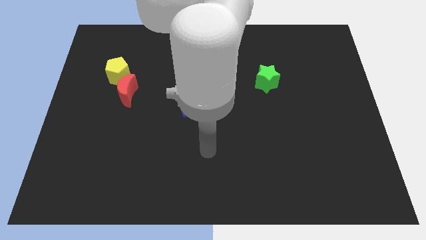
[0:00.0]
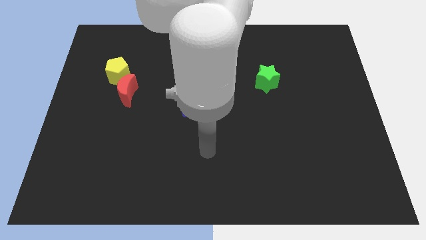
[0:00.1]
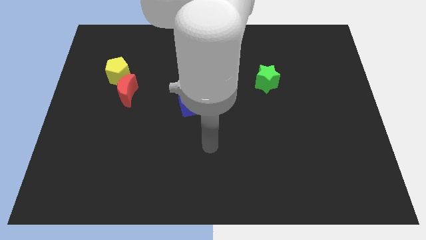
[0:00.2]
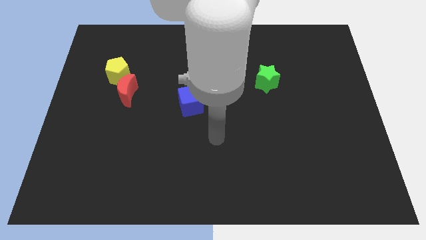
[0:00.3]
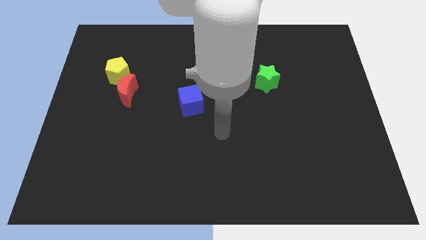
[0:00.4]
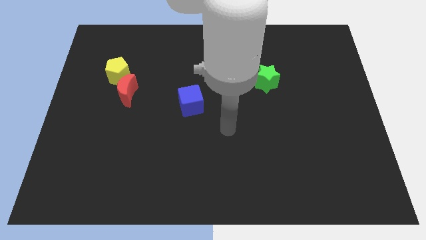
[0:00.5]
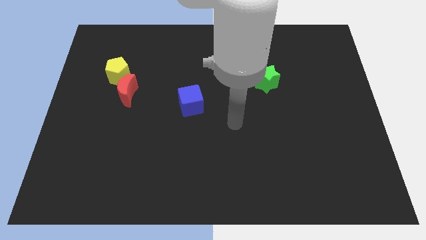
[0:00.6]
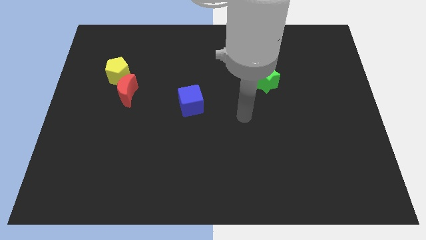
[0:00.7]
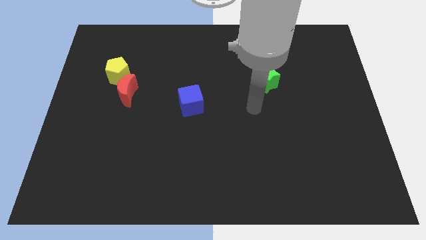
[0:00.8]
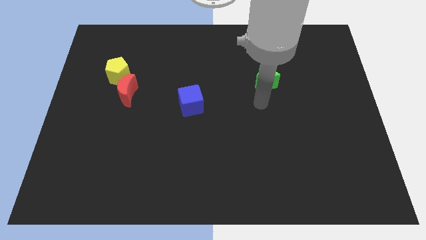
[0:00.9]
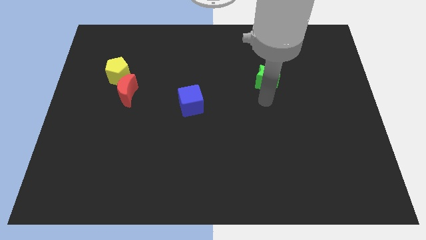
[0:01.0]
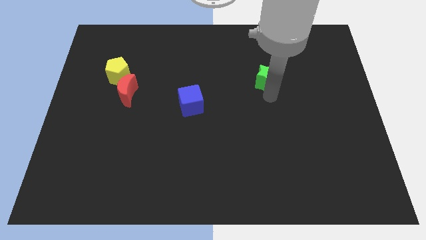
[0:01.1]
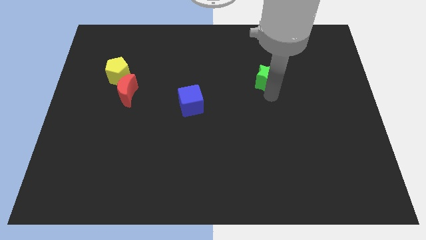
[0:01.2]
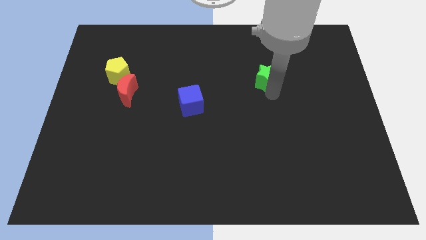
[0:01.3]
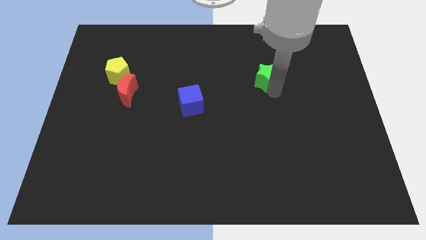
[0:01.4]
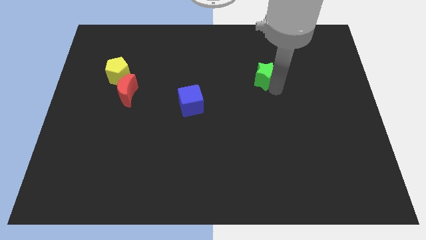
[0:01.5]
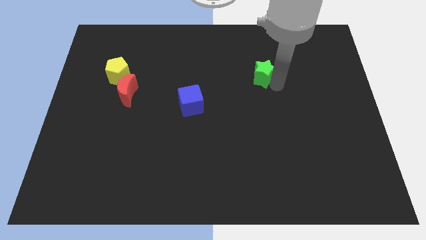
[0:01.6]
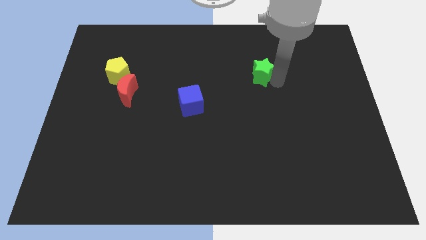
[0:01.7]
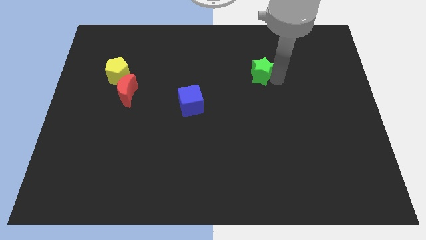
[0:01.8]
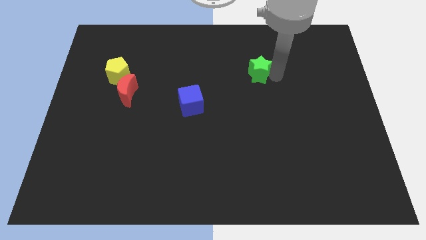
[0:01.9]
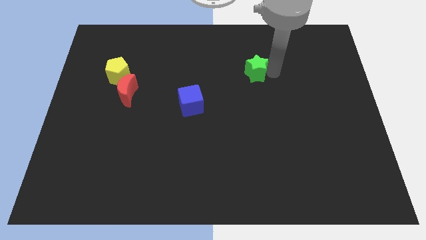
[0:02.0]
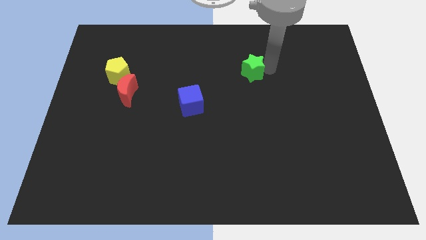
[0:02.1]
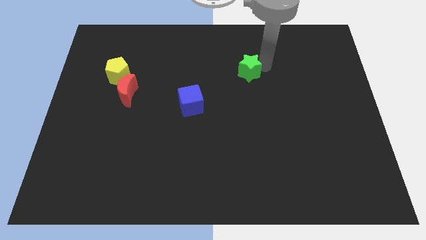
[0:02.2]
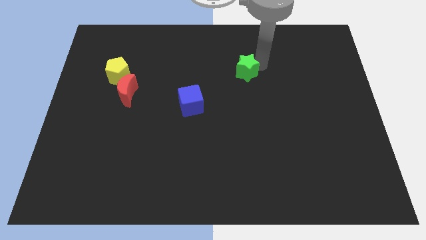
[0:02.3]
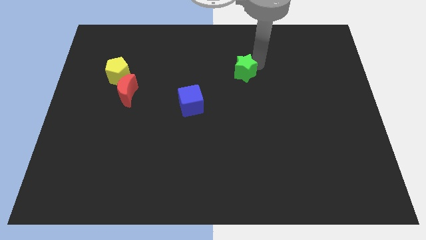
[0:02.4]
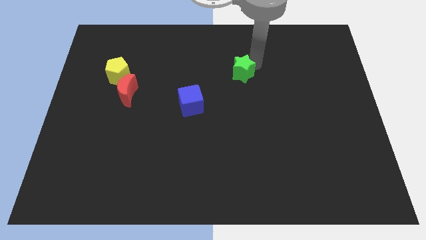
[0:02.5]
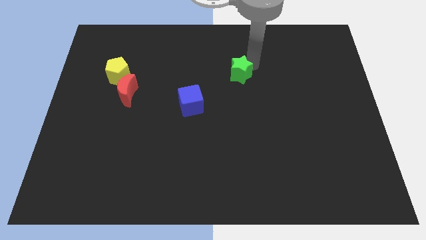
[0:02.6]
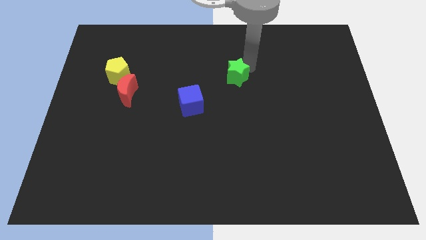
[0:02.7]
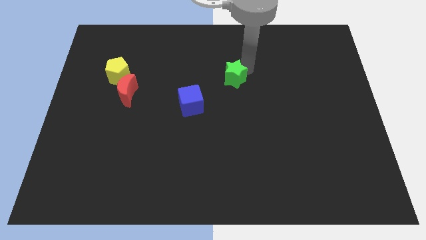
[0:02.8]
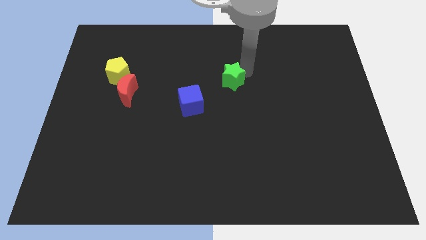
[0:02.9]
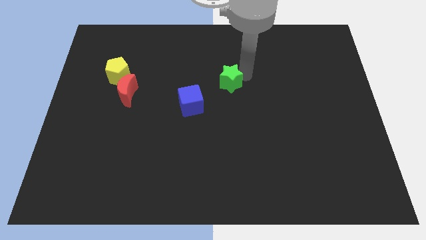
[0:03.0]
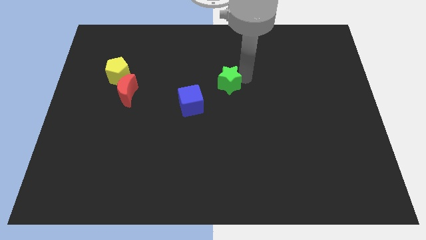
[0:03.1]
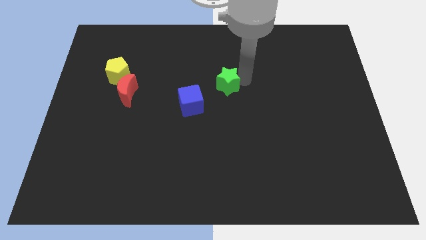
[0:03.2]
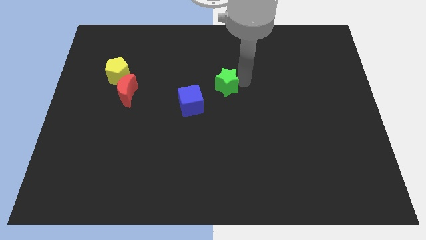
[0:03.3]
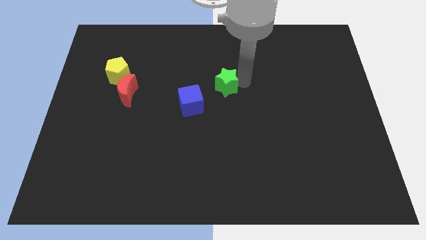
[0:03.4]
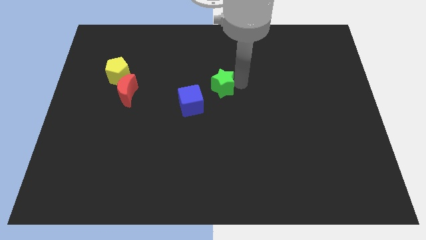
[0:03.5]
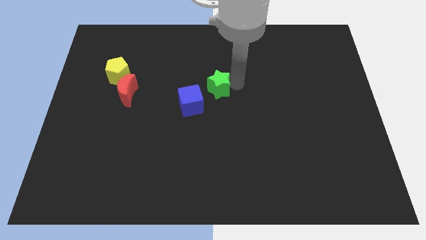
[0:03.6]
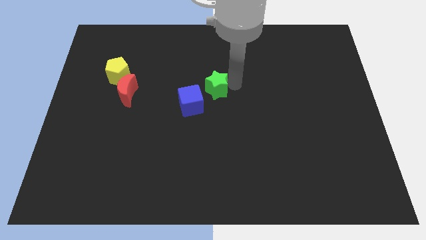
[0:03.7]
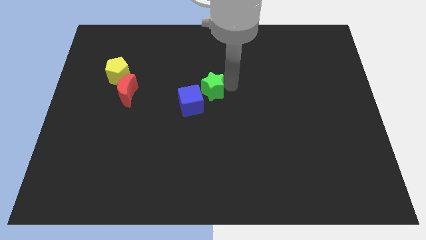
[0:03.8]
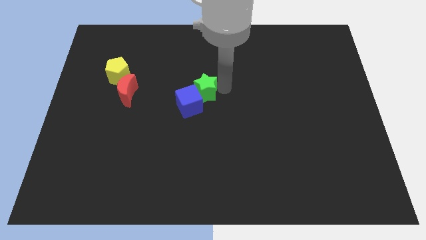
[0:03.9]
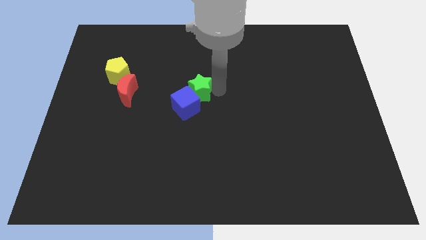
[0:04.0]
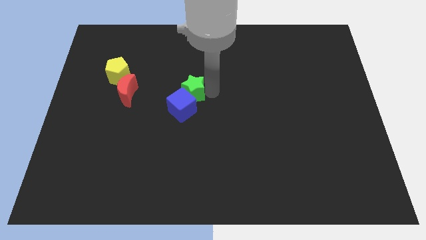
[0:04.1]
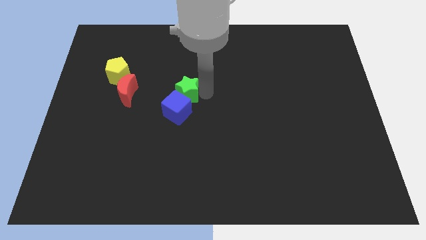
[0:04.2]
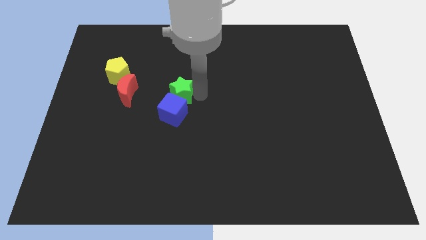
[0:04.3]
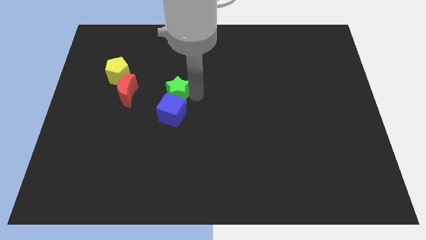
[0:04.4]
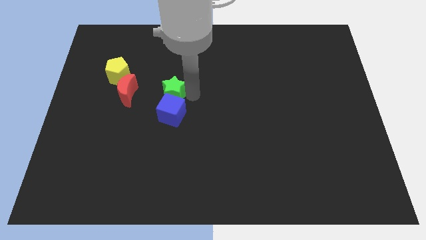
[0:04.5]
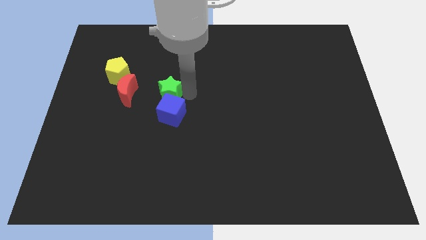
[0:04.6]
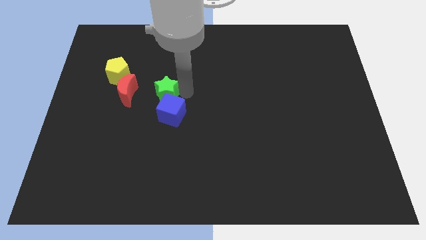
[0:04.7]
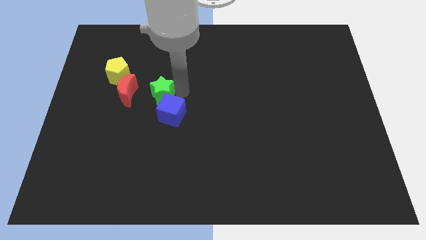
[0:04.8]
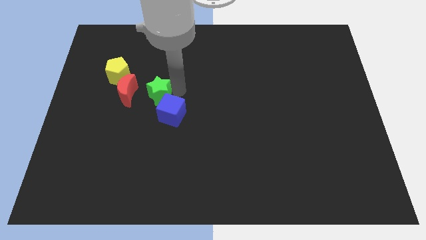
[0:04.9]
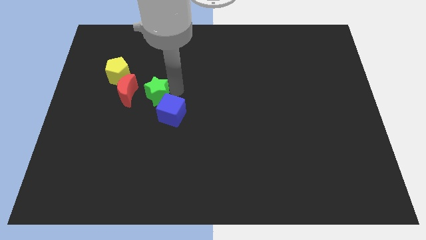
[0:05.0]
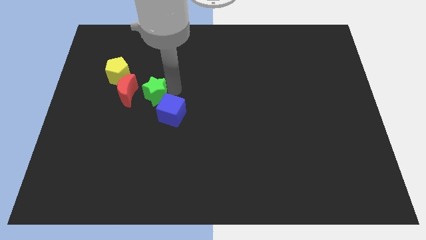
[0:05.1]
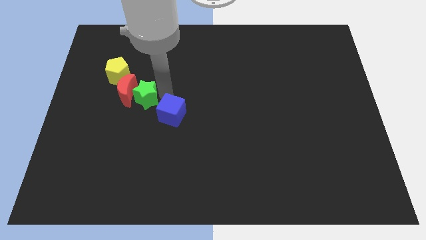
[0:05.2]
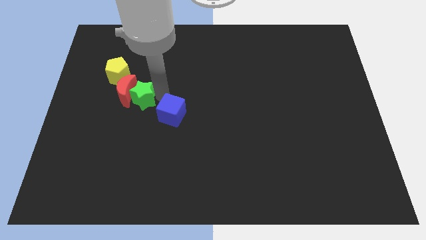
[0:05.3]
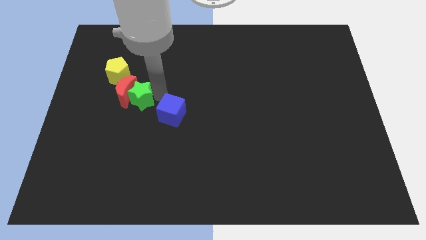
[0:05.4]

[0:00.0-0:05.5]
push the green star to the moon

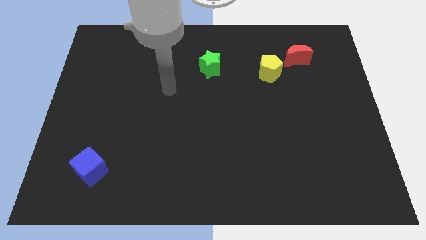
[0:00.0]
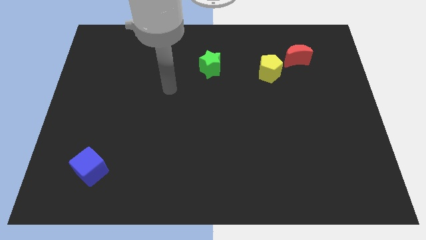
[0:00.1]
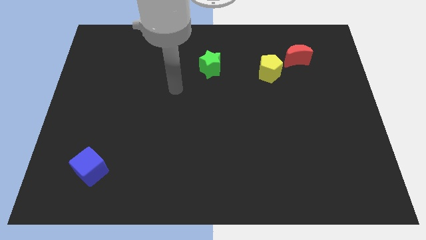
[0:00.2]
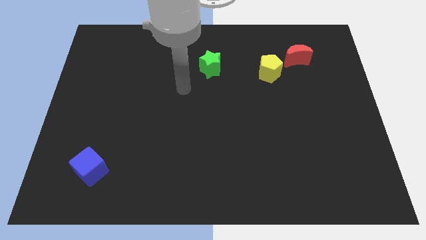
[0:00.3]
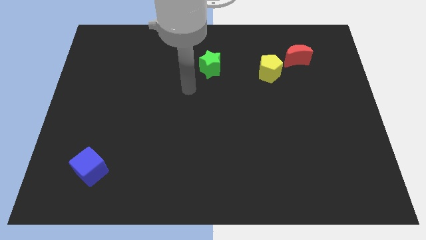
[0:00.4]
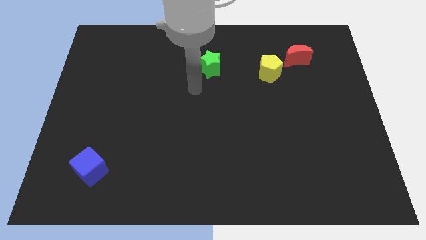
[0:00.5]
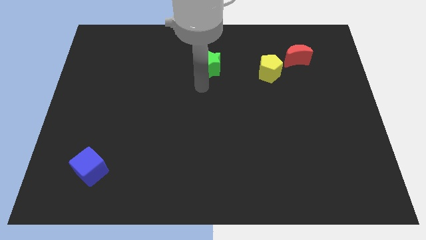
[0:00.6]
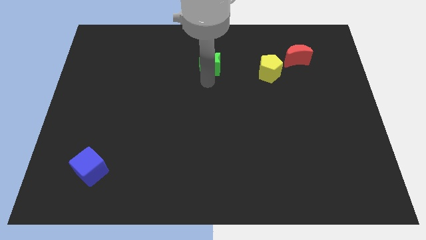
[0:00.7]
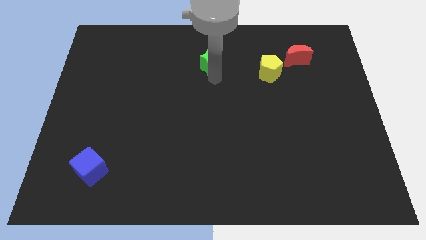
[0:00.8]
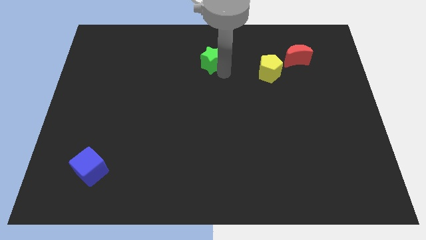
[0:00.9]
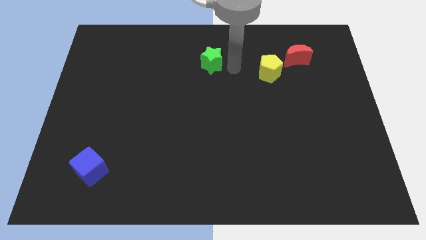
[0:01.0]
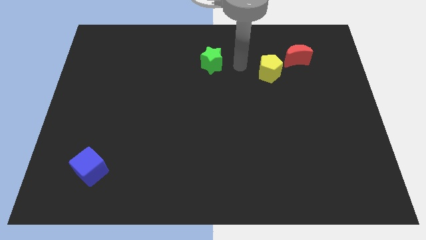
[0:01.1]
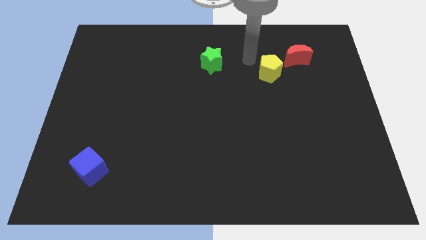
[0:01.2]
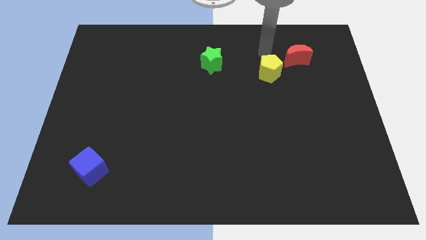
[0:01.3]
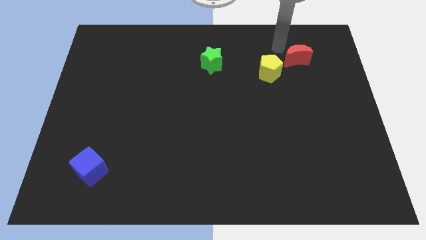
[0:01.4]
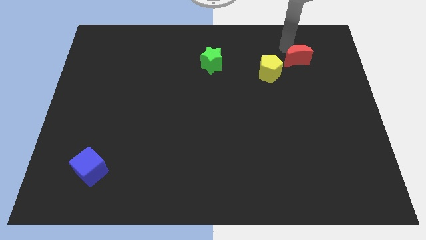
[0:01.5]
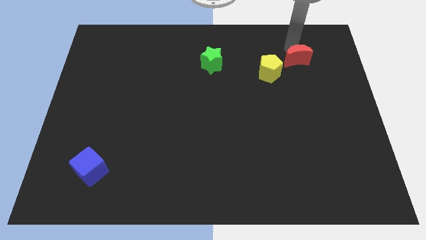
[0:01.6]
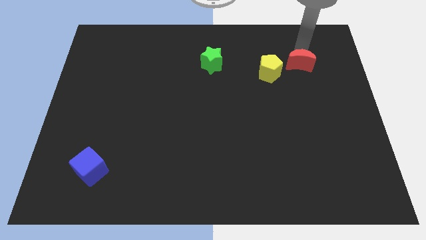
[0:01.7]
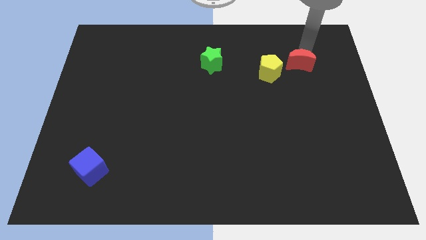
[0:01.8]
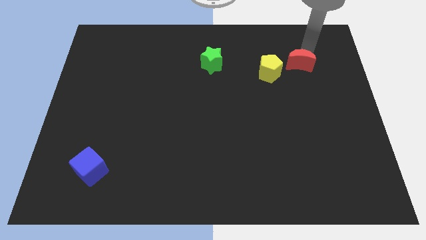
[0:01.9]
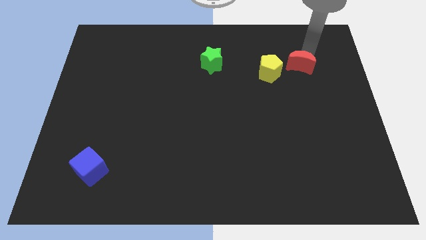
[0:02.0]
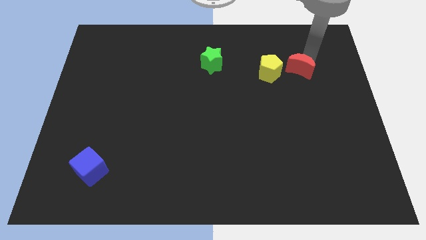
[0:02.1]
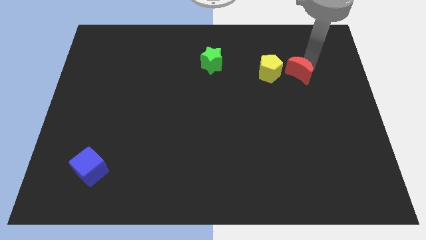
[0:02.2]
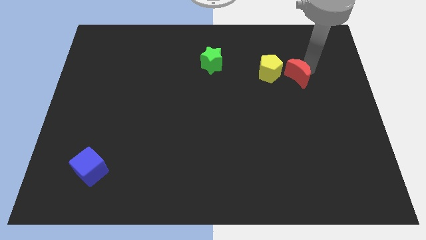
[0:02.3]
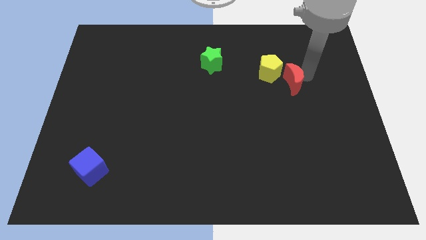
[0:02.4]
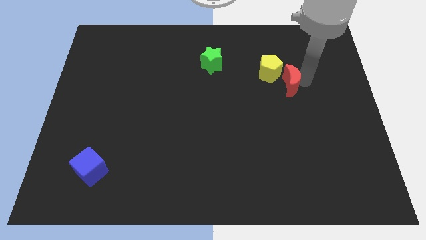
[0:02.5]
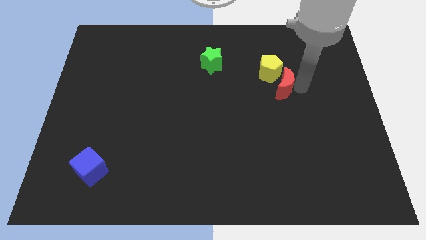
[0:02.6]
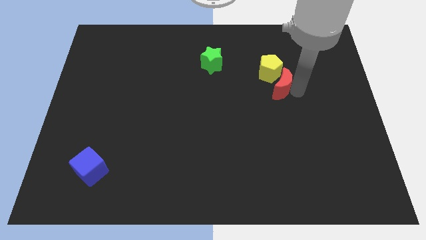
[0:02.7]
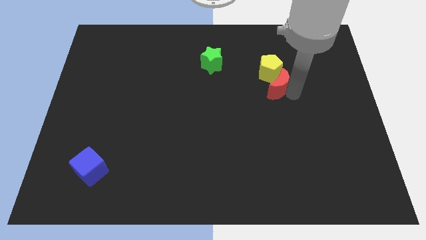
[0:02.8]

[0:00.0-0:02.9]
move the moon next to the yellow block

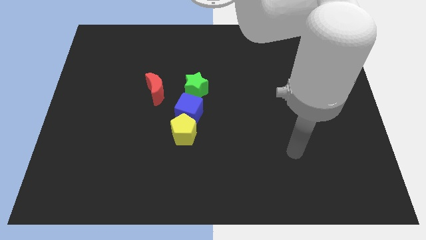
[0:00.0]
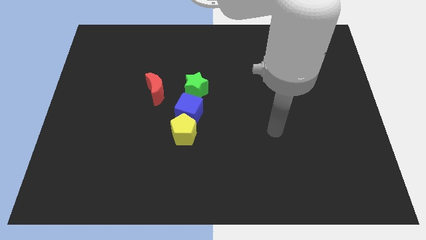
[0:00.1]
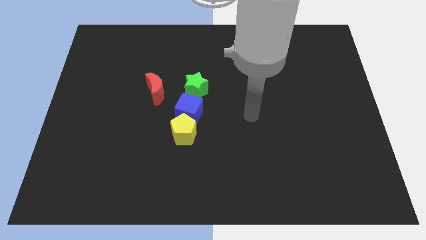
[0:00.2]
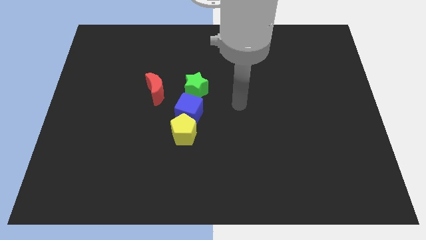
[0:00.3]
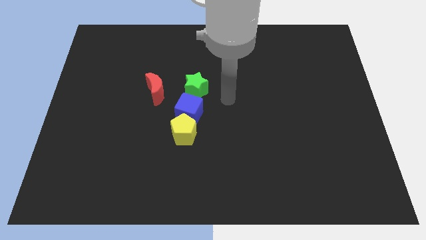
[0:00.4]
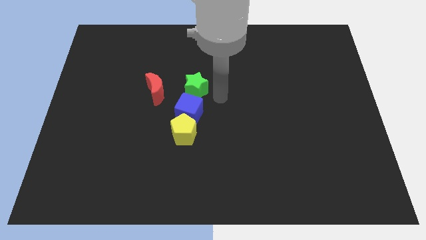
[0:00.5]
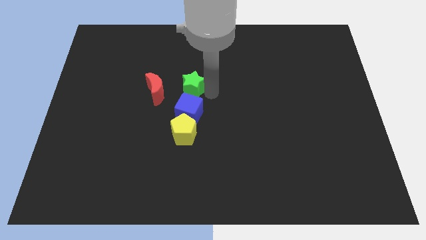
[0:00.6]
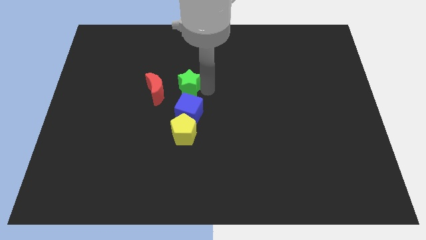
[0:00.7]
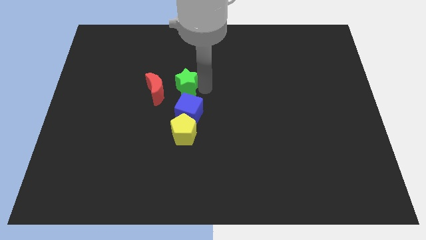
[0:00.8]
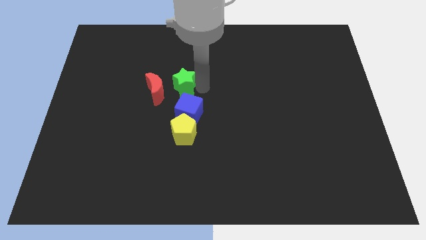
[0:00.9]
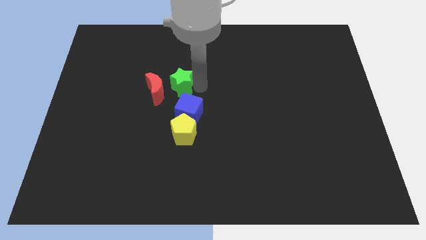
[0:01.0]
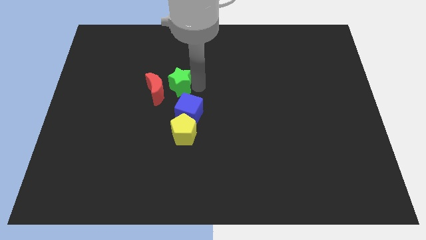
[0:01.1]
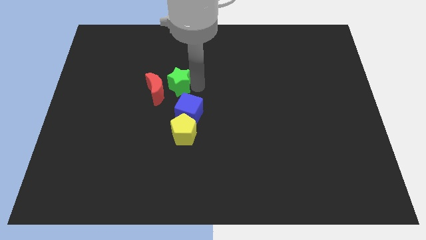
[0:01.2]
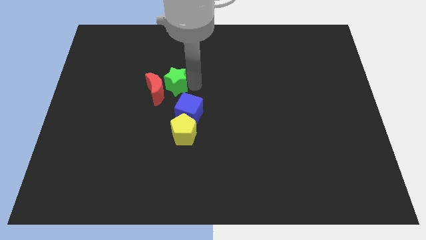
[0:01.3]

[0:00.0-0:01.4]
move the green star to the red block
